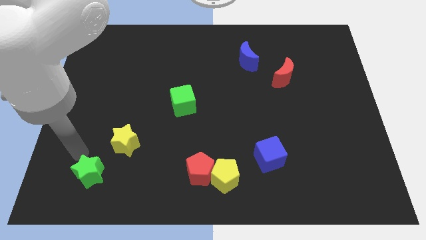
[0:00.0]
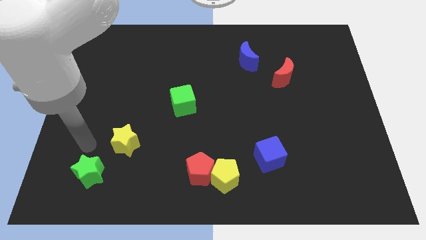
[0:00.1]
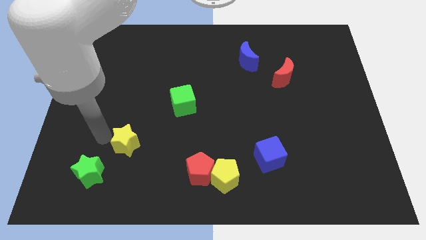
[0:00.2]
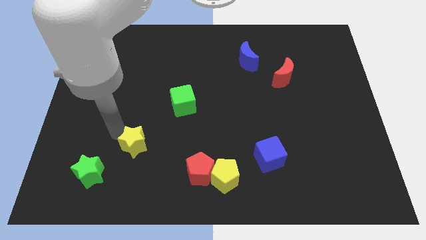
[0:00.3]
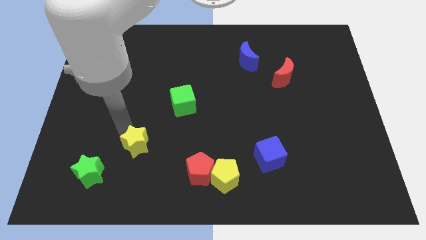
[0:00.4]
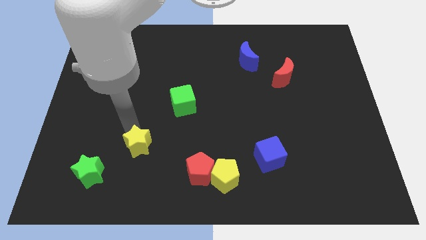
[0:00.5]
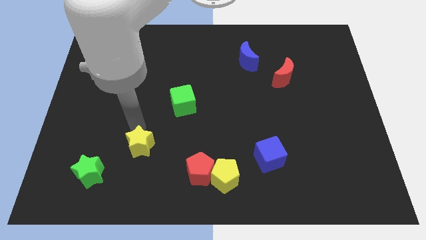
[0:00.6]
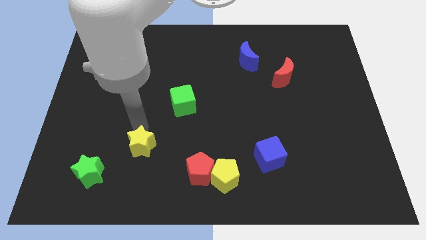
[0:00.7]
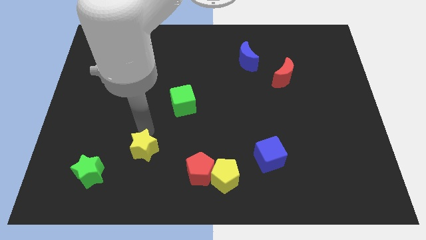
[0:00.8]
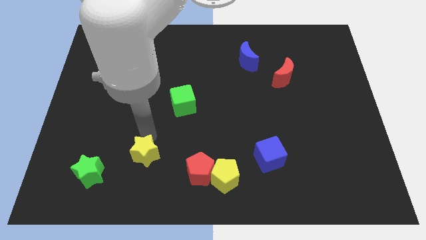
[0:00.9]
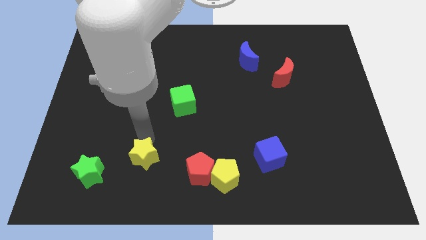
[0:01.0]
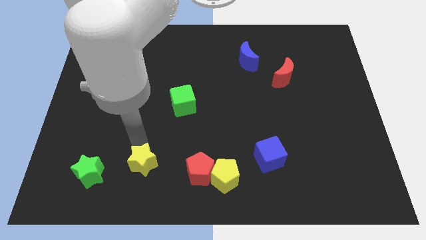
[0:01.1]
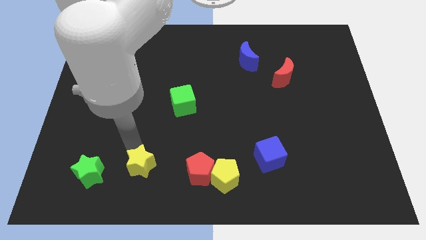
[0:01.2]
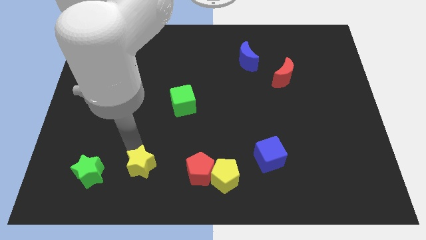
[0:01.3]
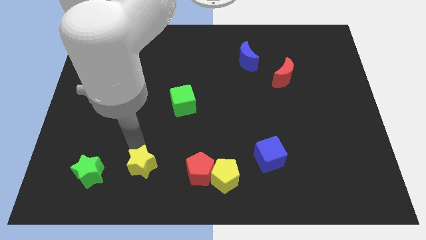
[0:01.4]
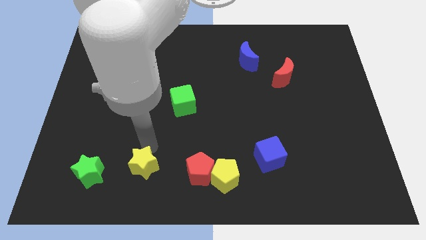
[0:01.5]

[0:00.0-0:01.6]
push the yellow star to the right of the green star

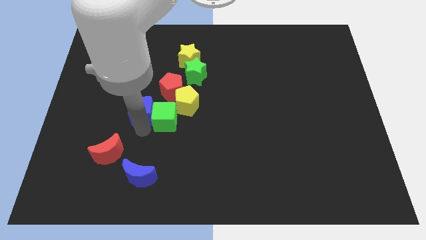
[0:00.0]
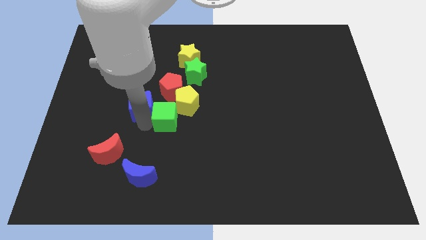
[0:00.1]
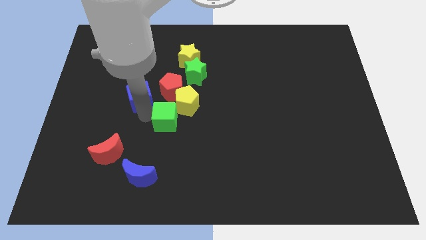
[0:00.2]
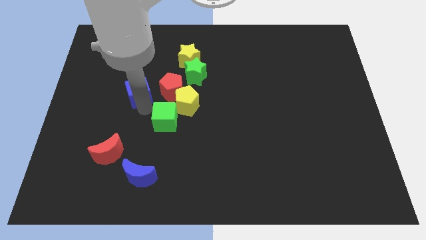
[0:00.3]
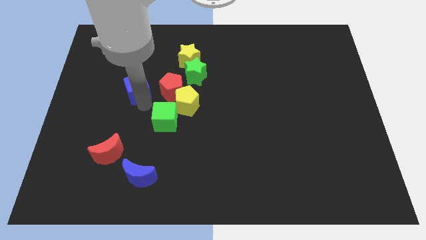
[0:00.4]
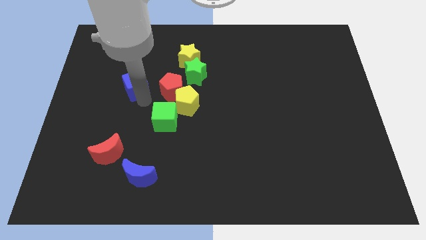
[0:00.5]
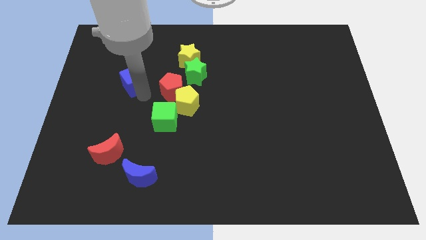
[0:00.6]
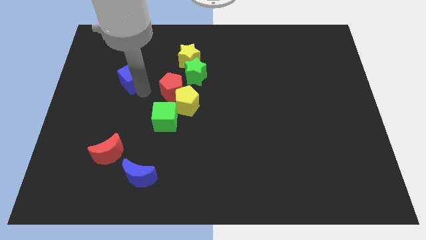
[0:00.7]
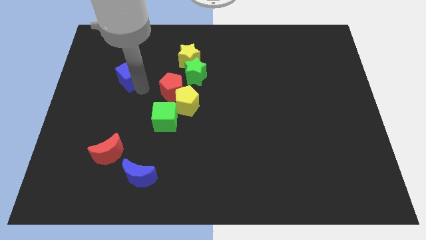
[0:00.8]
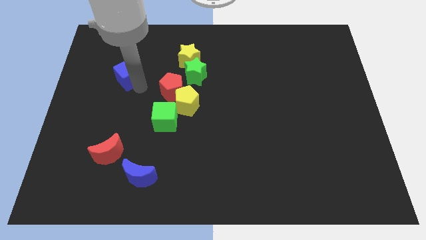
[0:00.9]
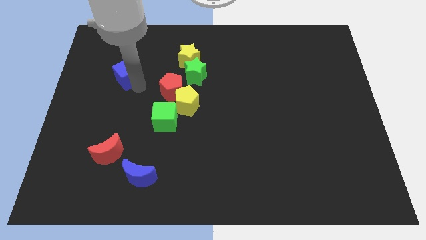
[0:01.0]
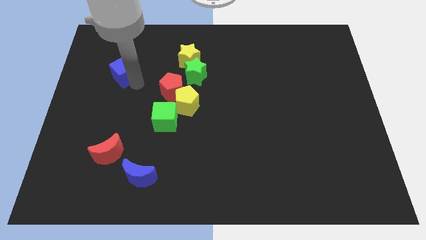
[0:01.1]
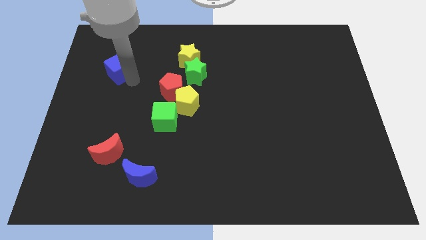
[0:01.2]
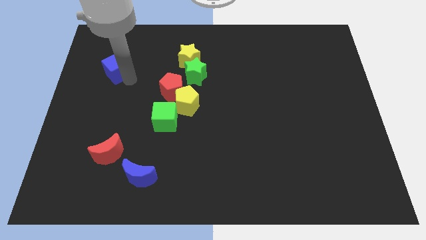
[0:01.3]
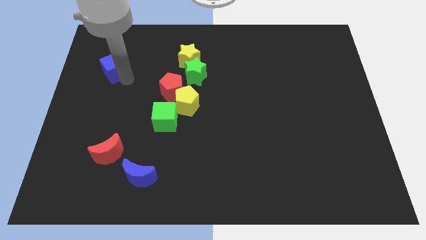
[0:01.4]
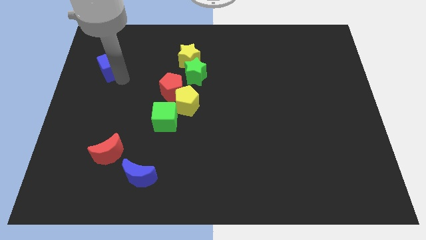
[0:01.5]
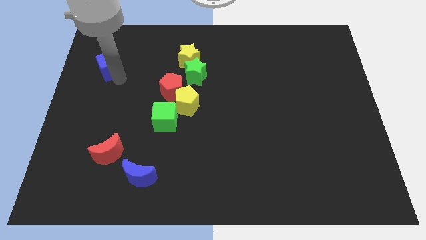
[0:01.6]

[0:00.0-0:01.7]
move the blue cube towards the left side

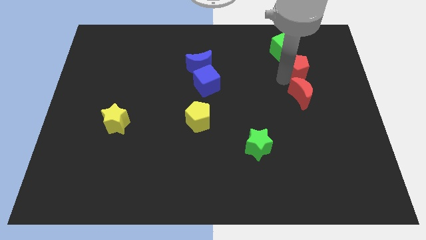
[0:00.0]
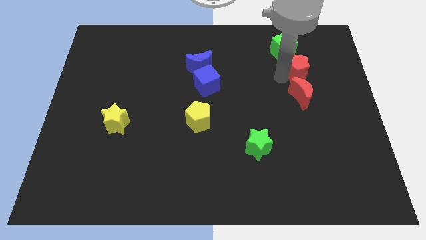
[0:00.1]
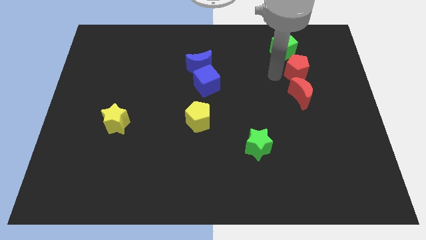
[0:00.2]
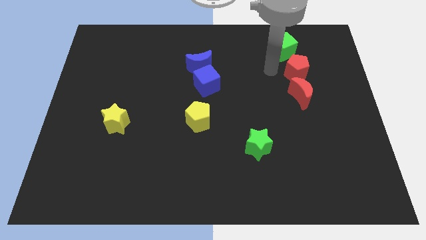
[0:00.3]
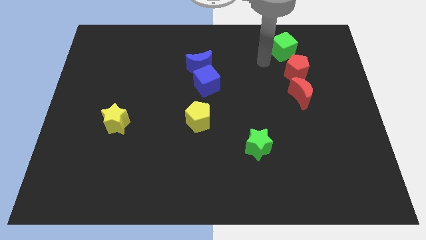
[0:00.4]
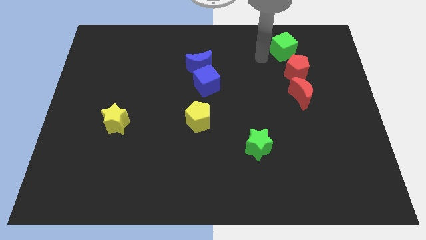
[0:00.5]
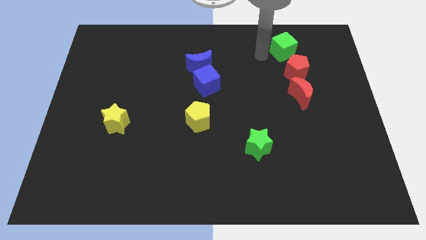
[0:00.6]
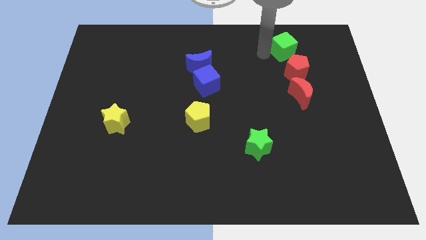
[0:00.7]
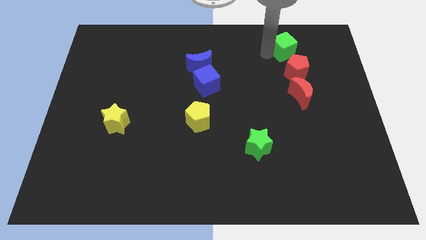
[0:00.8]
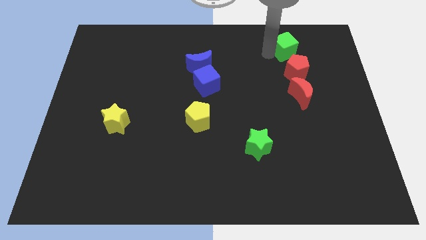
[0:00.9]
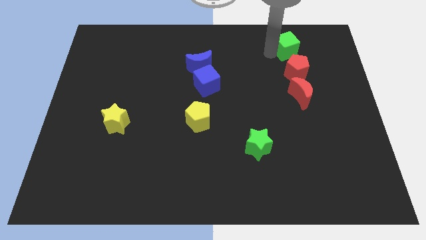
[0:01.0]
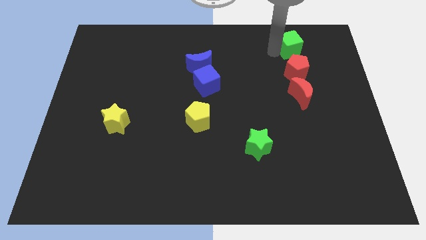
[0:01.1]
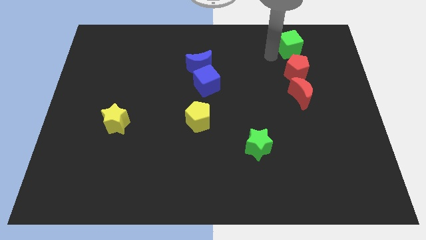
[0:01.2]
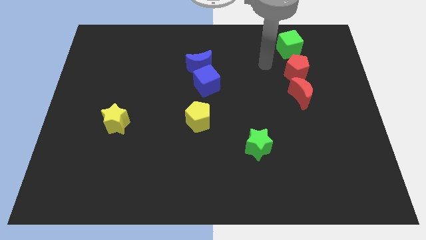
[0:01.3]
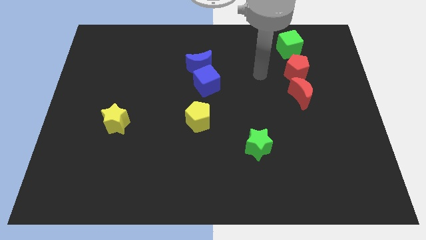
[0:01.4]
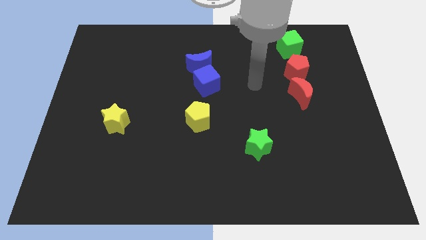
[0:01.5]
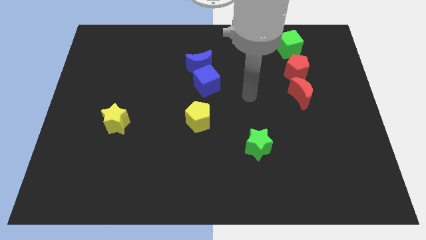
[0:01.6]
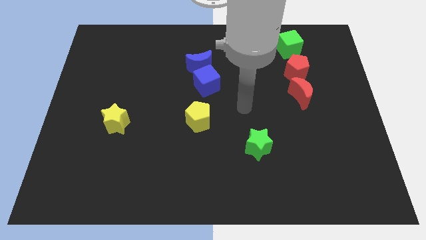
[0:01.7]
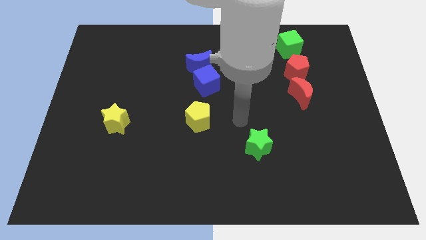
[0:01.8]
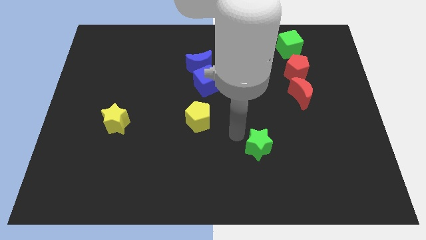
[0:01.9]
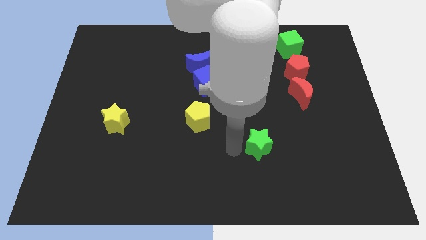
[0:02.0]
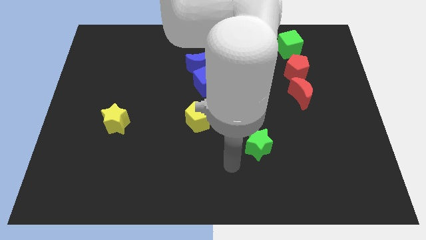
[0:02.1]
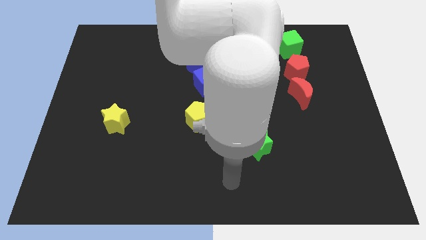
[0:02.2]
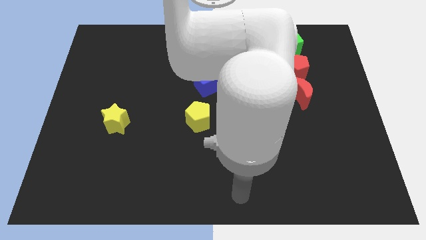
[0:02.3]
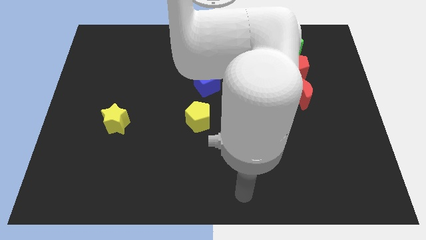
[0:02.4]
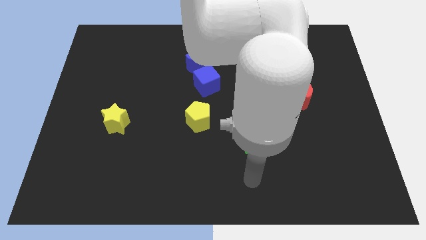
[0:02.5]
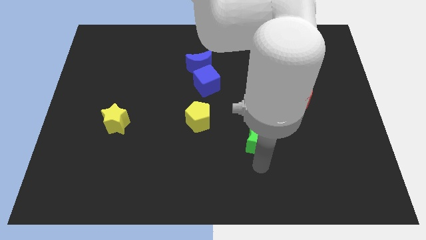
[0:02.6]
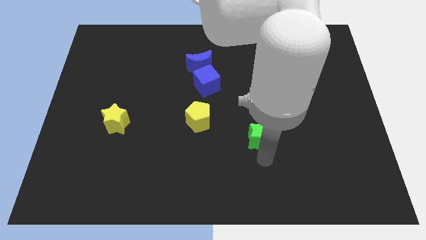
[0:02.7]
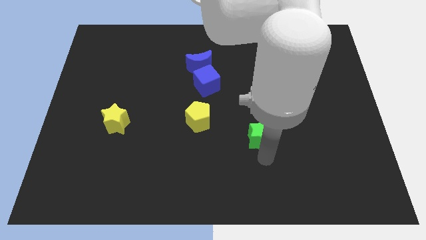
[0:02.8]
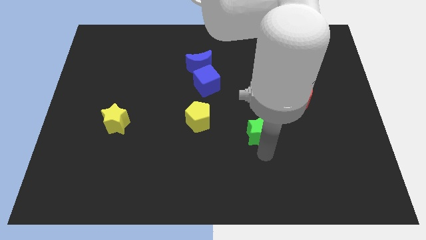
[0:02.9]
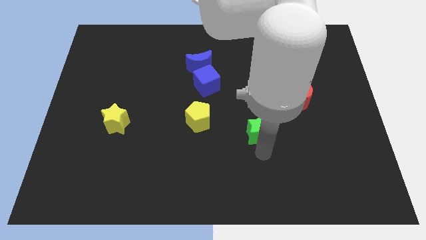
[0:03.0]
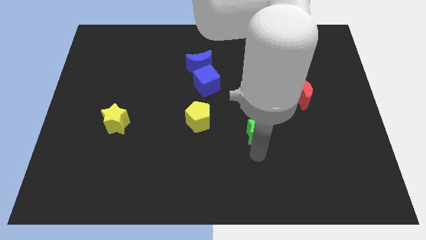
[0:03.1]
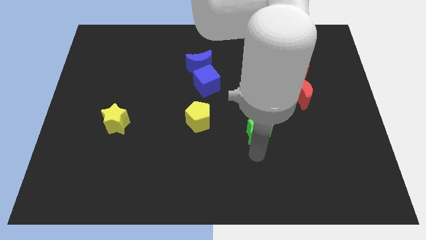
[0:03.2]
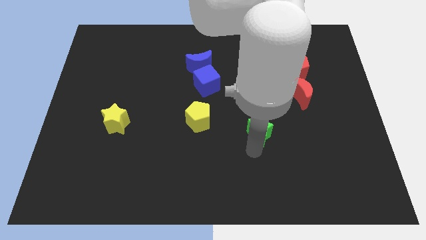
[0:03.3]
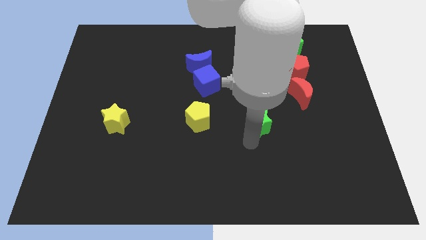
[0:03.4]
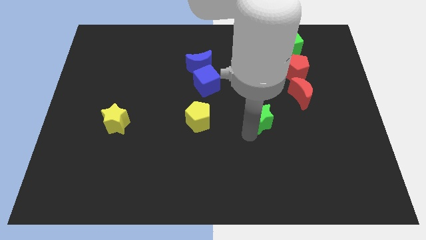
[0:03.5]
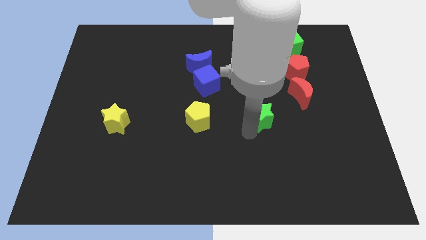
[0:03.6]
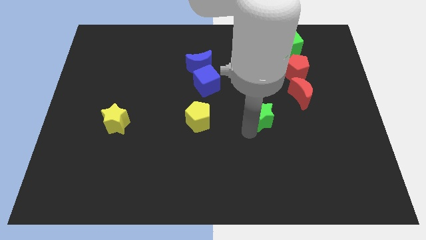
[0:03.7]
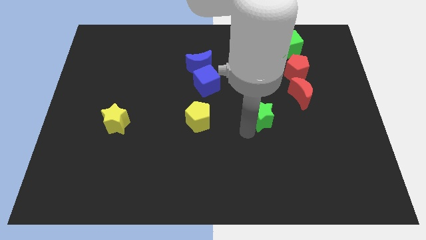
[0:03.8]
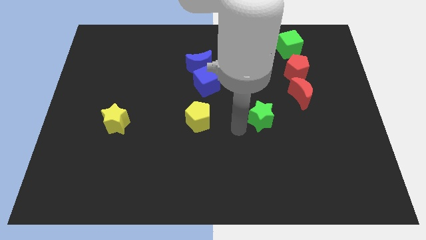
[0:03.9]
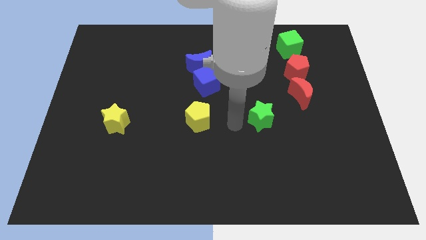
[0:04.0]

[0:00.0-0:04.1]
move the green star parallel right to the yellow pentagon

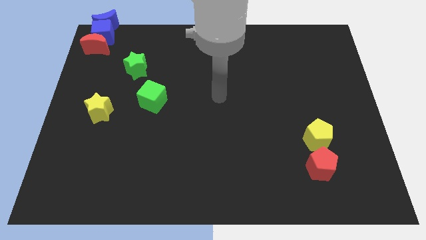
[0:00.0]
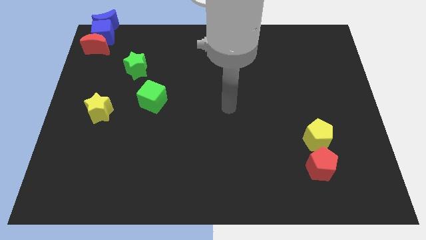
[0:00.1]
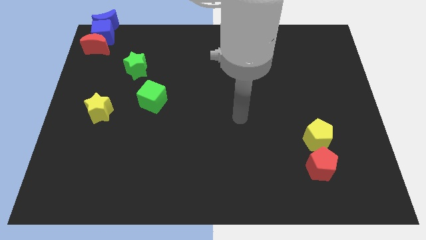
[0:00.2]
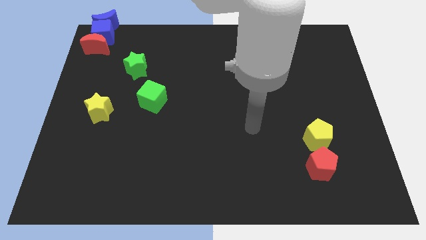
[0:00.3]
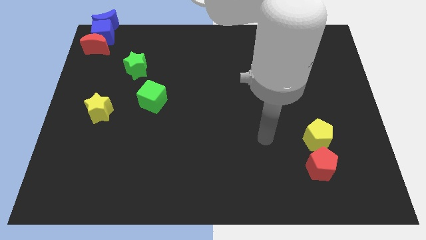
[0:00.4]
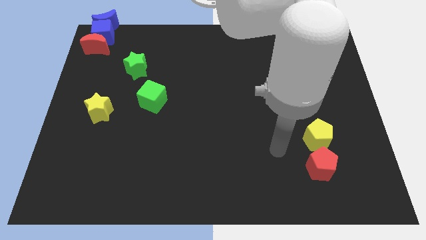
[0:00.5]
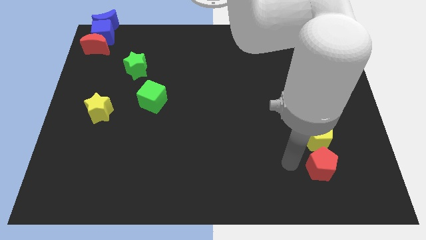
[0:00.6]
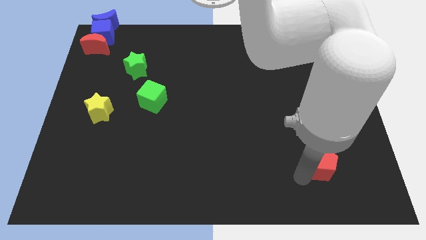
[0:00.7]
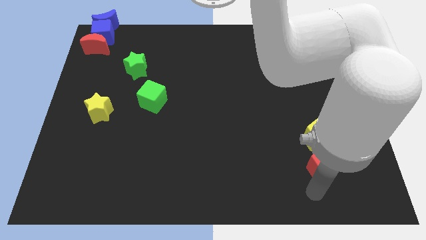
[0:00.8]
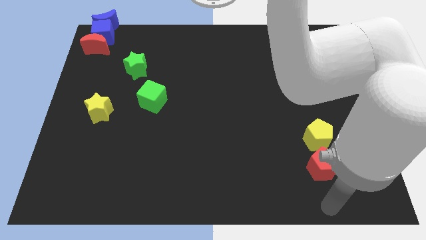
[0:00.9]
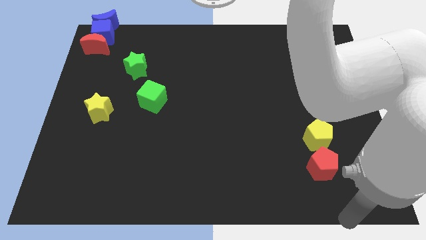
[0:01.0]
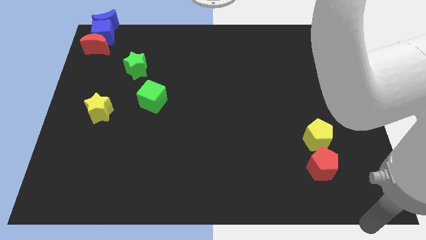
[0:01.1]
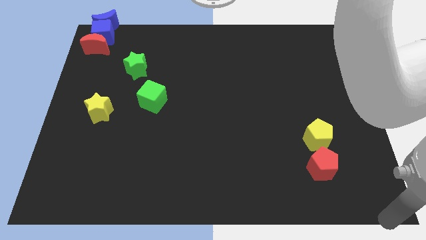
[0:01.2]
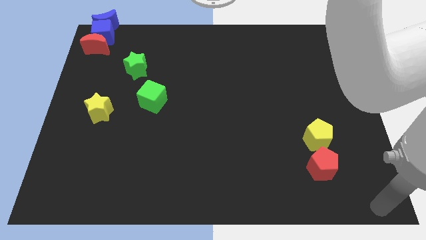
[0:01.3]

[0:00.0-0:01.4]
place your arm at the bottom right corner of the board
